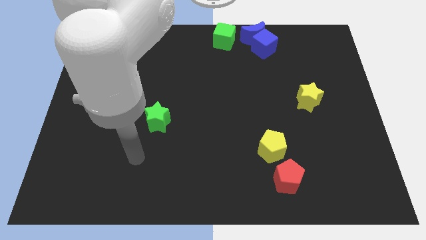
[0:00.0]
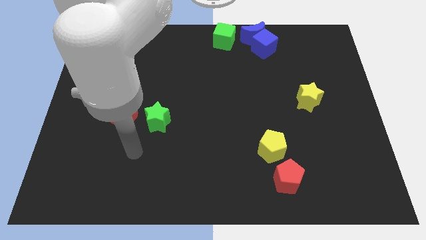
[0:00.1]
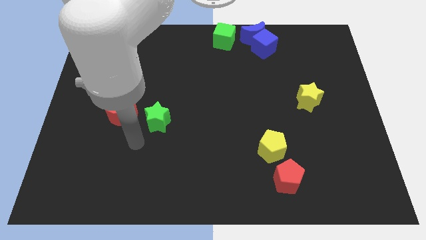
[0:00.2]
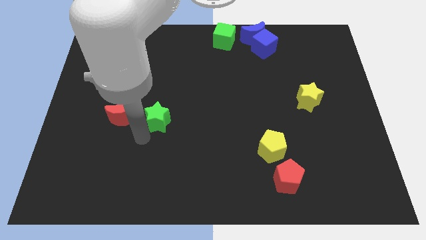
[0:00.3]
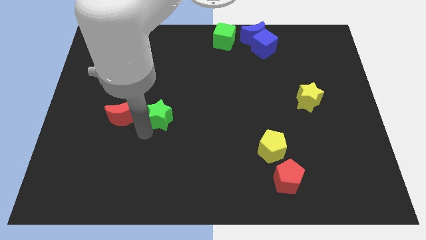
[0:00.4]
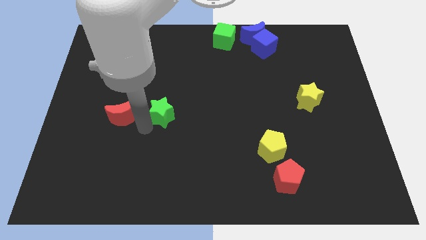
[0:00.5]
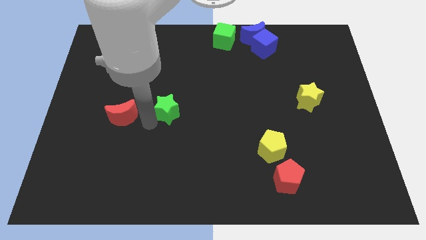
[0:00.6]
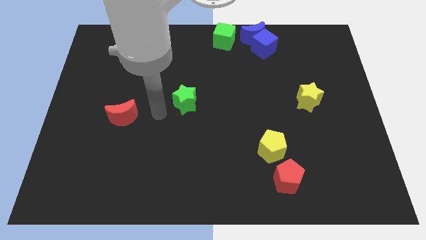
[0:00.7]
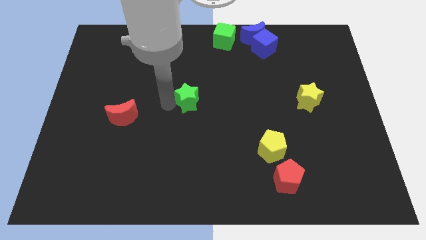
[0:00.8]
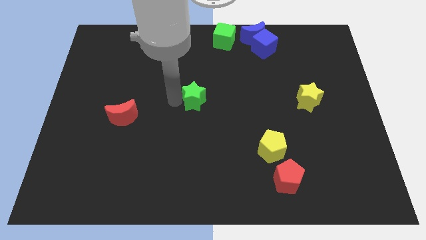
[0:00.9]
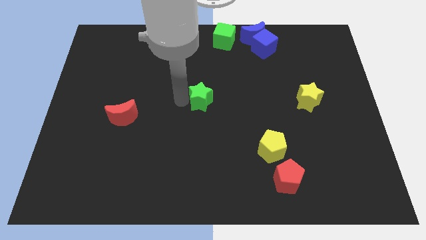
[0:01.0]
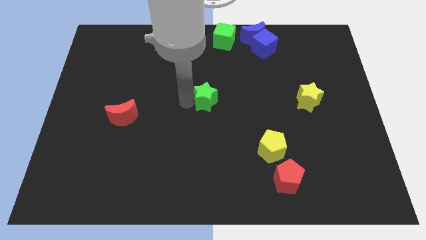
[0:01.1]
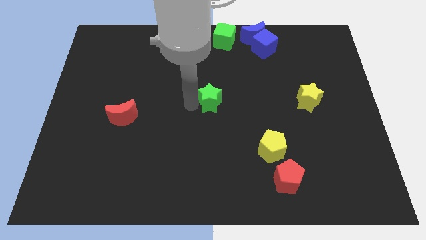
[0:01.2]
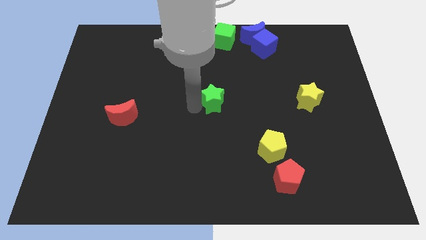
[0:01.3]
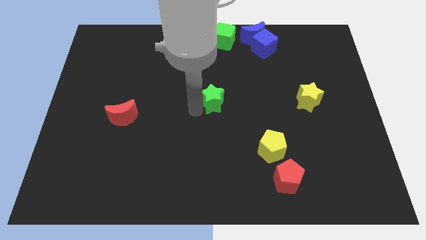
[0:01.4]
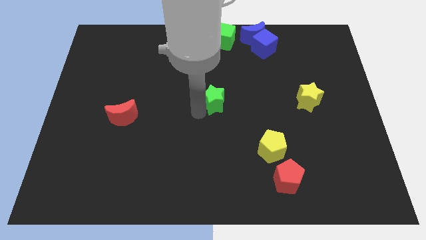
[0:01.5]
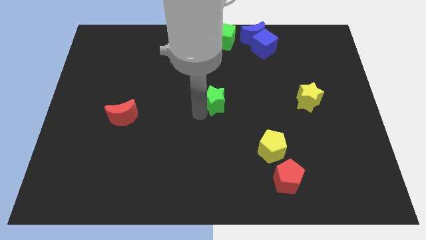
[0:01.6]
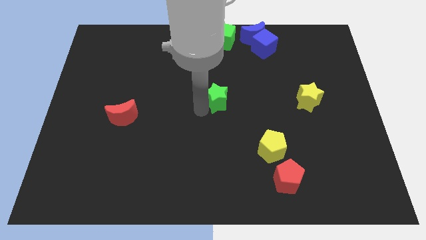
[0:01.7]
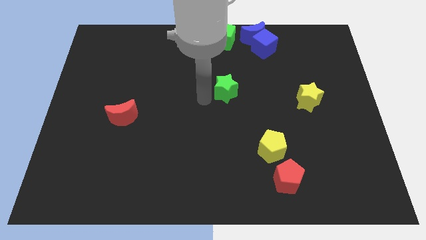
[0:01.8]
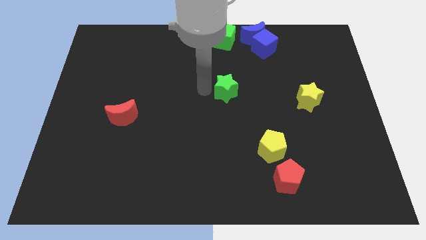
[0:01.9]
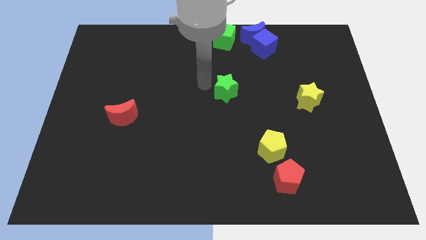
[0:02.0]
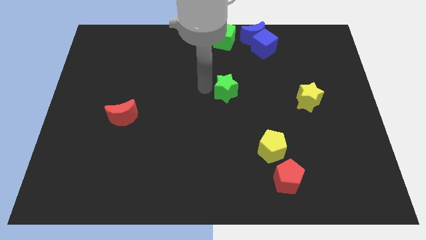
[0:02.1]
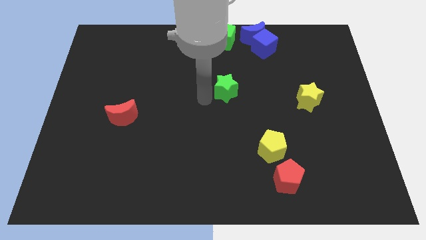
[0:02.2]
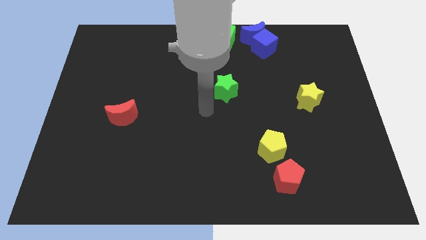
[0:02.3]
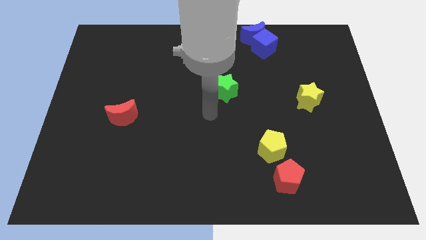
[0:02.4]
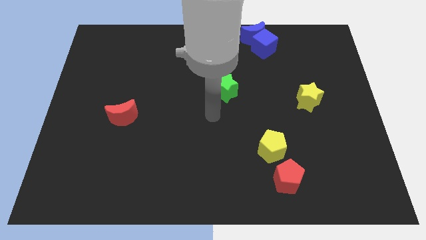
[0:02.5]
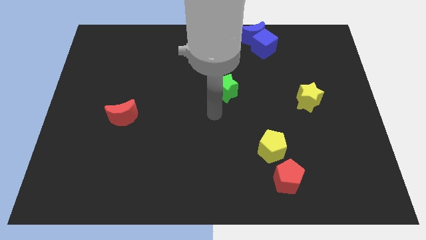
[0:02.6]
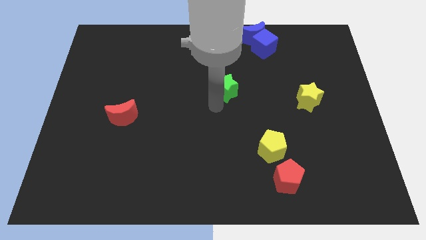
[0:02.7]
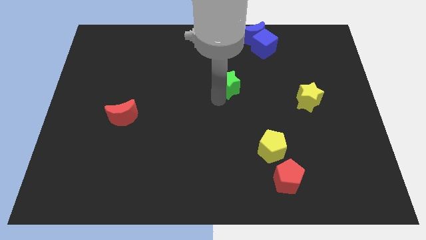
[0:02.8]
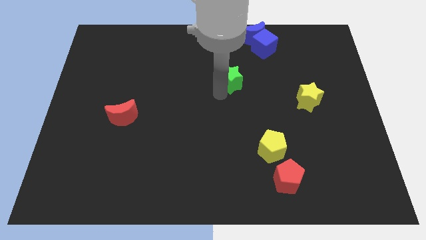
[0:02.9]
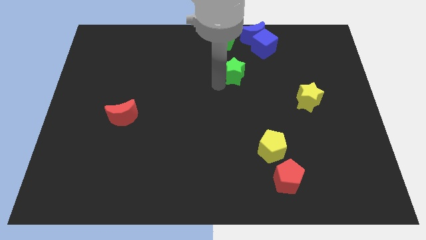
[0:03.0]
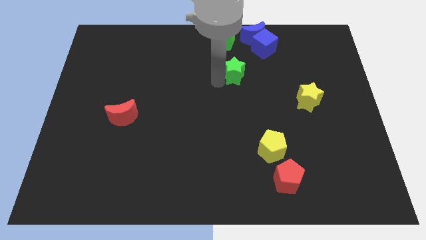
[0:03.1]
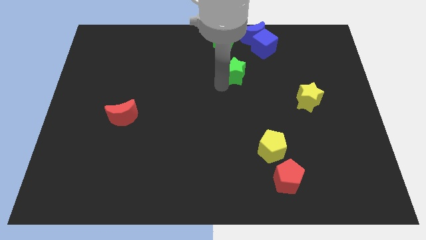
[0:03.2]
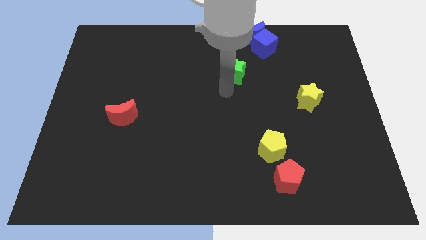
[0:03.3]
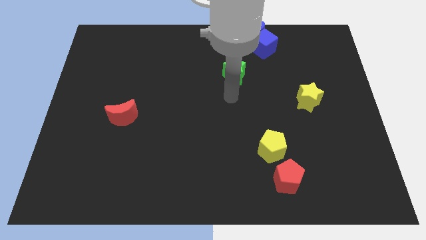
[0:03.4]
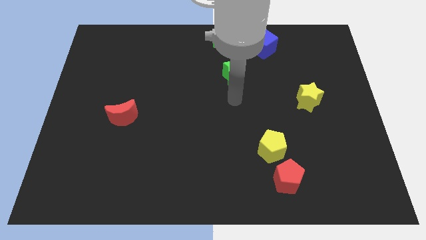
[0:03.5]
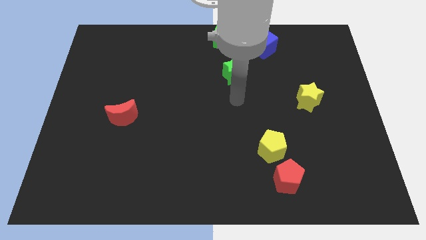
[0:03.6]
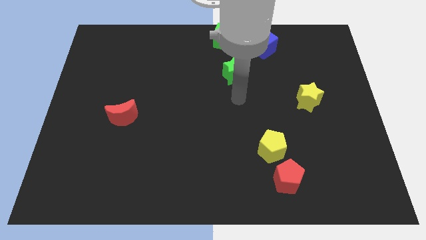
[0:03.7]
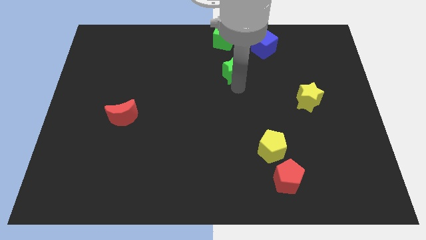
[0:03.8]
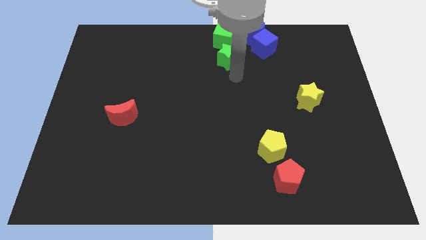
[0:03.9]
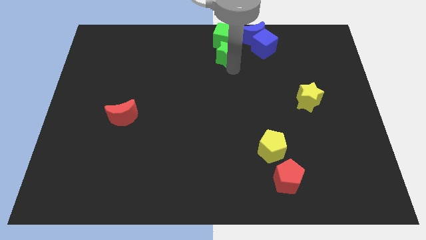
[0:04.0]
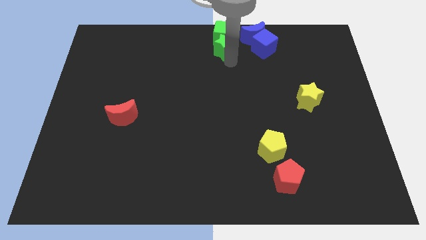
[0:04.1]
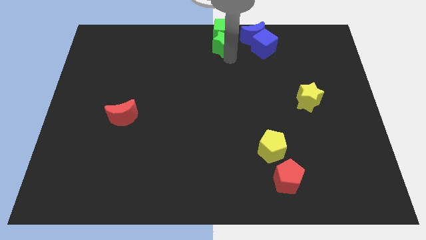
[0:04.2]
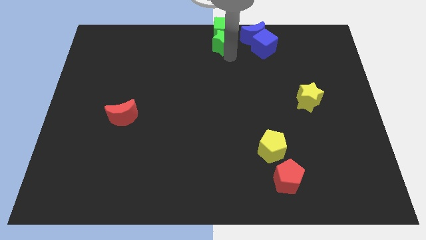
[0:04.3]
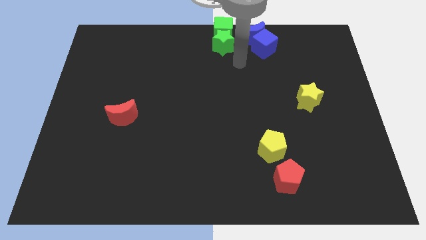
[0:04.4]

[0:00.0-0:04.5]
push the green star into green cube

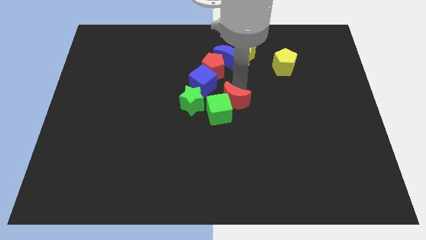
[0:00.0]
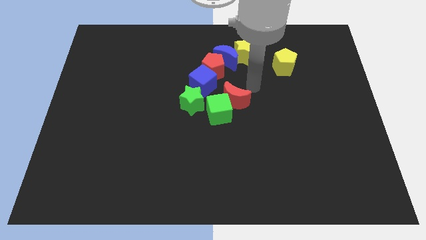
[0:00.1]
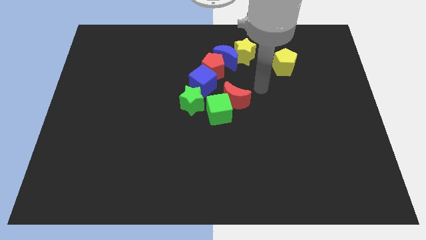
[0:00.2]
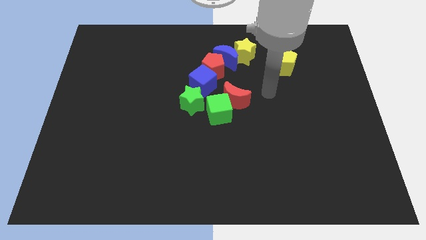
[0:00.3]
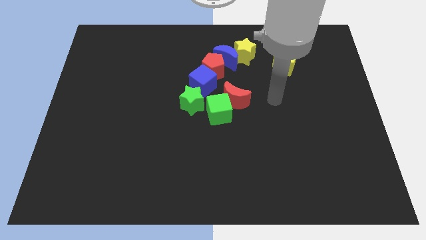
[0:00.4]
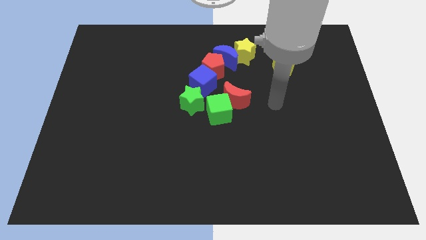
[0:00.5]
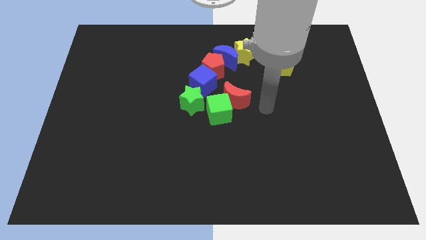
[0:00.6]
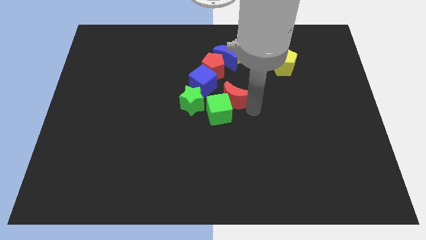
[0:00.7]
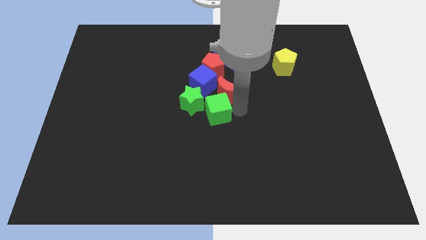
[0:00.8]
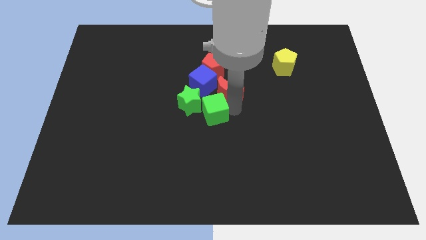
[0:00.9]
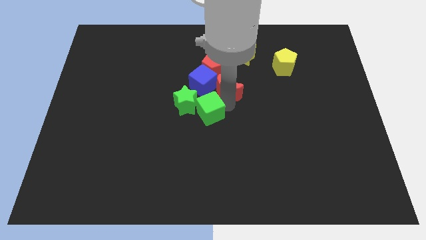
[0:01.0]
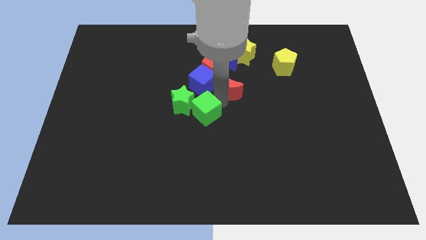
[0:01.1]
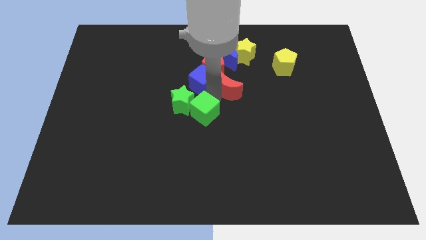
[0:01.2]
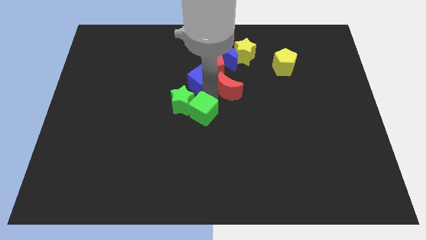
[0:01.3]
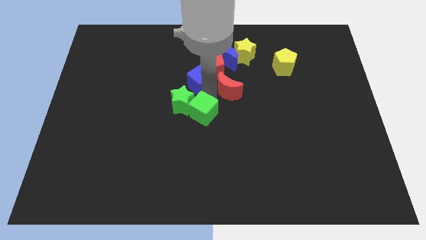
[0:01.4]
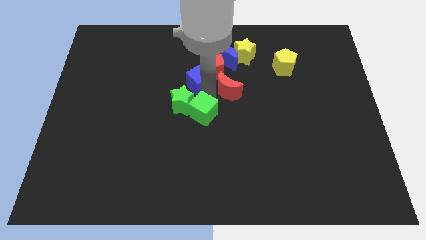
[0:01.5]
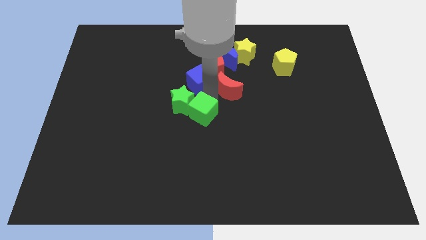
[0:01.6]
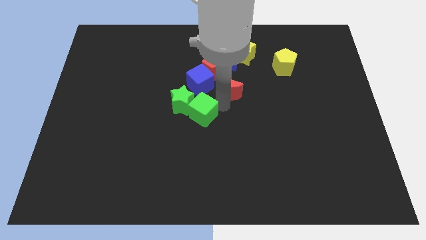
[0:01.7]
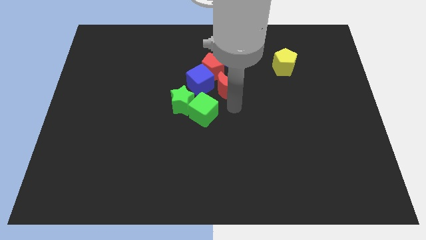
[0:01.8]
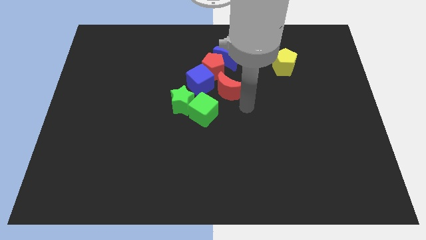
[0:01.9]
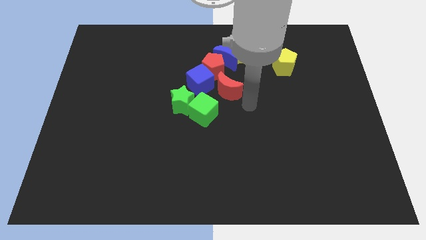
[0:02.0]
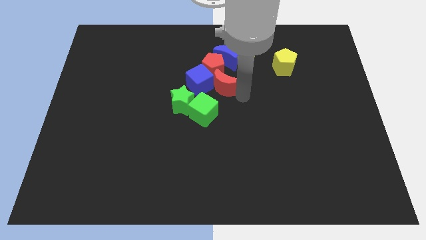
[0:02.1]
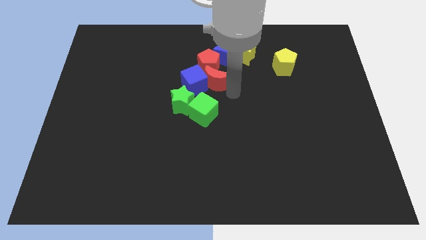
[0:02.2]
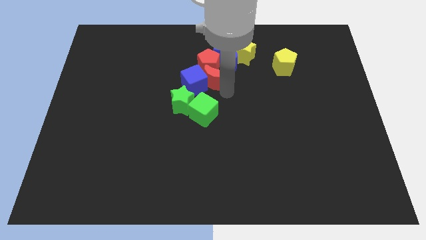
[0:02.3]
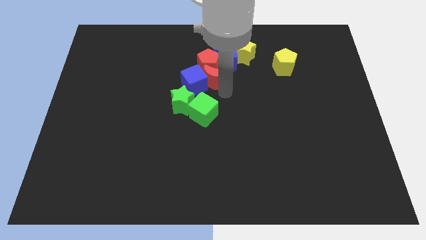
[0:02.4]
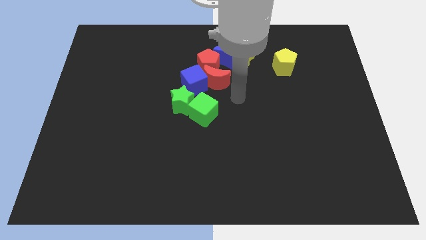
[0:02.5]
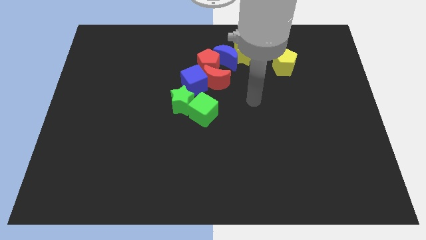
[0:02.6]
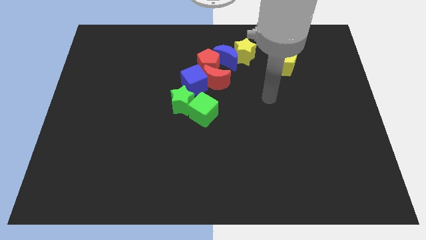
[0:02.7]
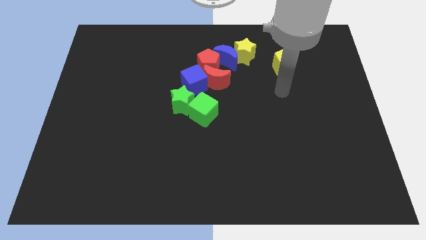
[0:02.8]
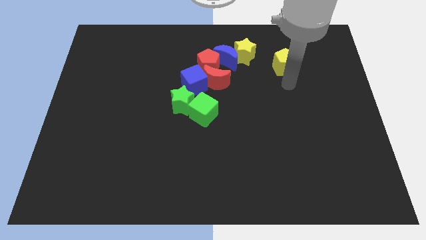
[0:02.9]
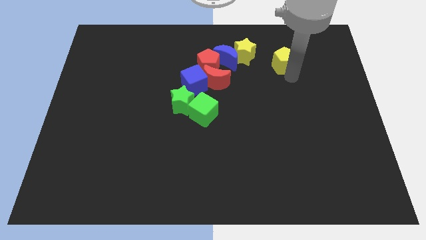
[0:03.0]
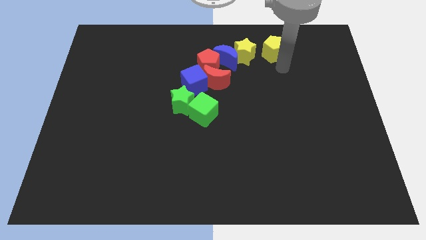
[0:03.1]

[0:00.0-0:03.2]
move the green cube and red crescent away from each other

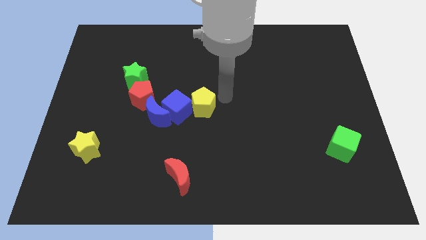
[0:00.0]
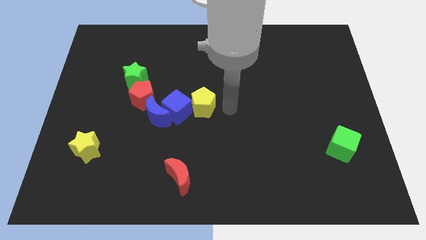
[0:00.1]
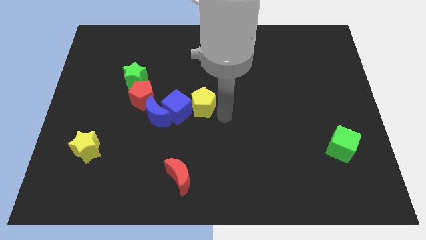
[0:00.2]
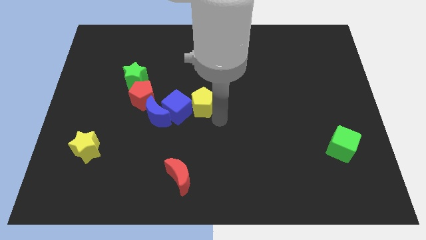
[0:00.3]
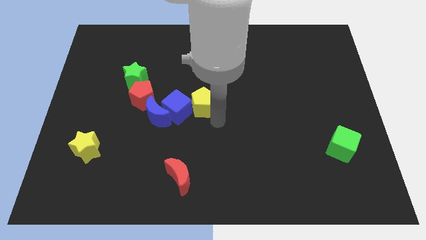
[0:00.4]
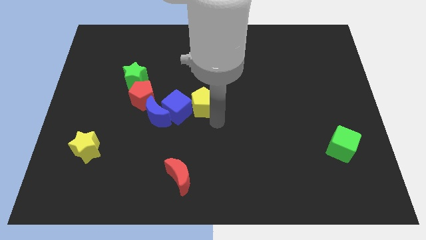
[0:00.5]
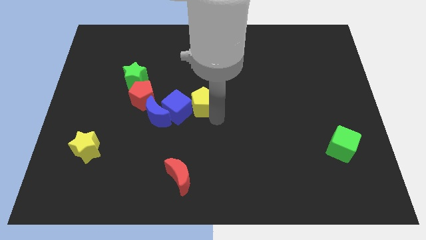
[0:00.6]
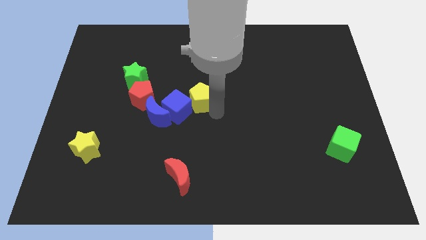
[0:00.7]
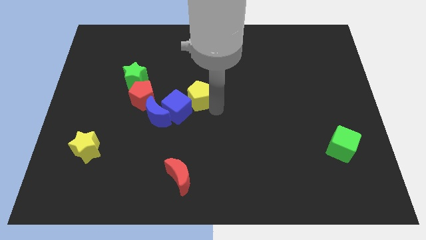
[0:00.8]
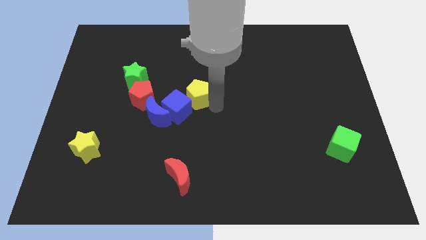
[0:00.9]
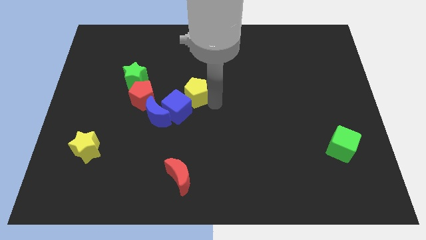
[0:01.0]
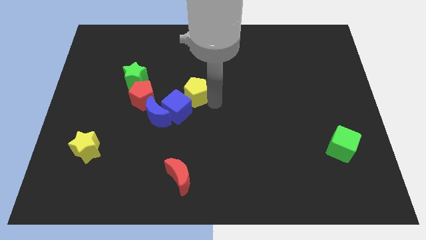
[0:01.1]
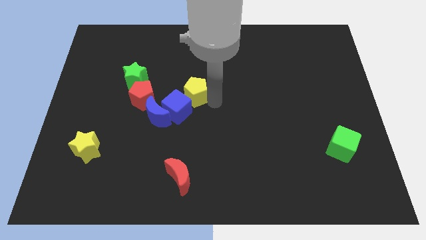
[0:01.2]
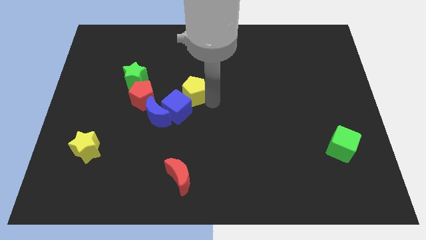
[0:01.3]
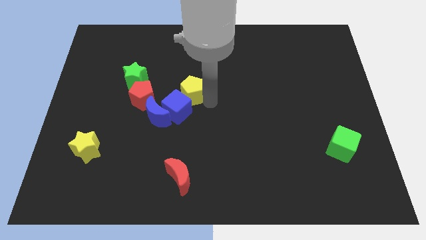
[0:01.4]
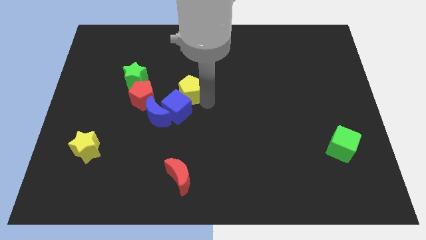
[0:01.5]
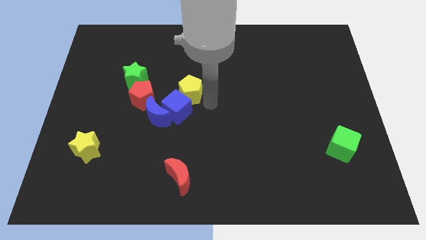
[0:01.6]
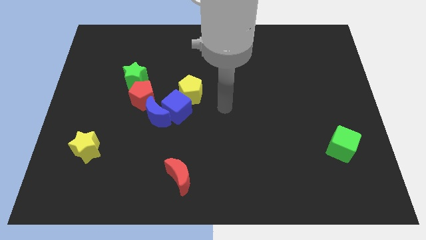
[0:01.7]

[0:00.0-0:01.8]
push the yellow pentagon diagonally right to blue cube
